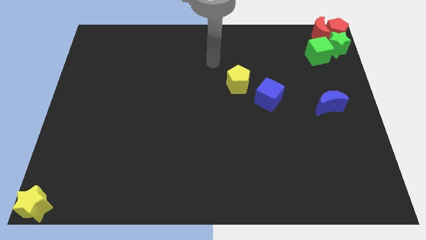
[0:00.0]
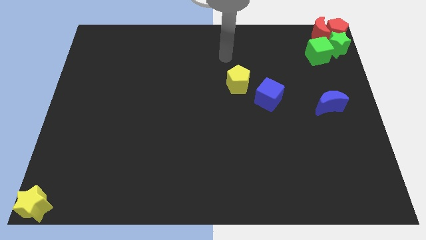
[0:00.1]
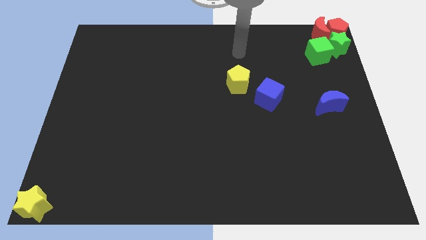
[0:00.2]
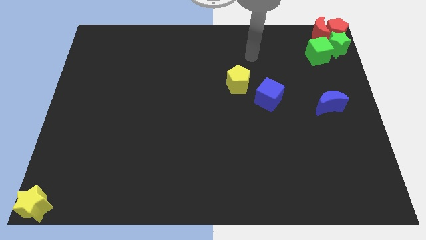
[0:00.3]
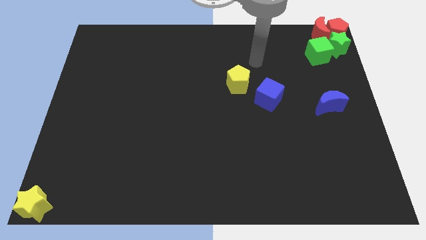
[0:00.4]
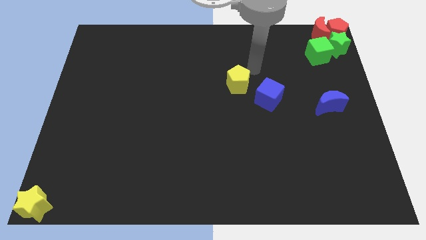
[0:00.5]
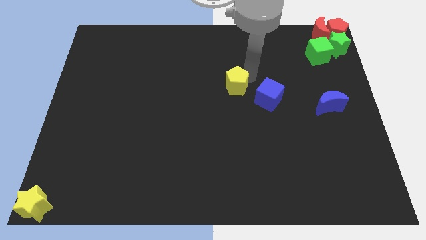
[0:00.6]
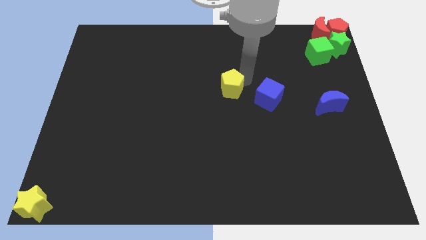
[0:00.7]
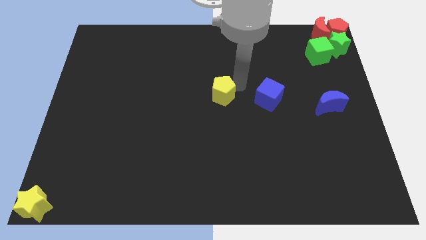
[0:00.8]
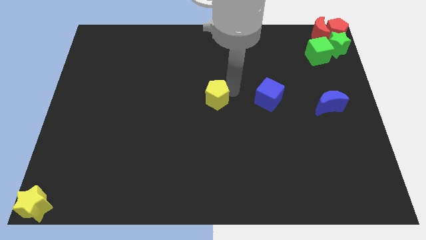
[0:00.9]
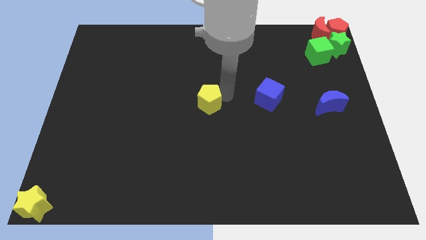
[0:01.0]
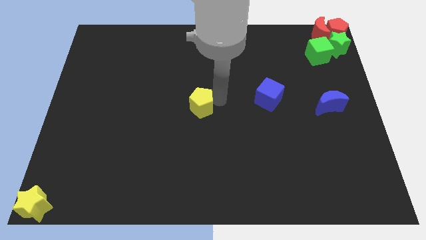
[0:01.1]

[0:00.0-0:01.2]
push the yellow pentagon to the center of the board

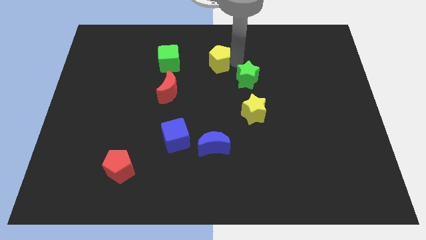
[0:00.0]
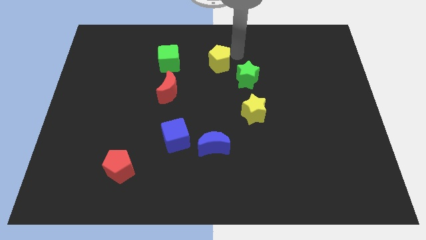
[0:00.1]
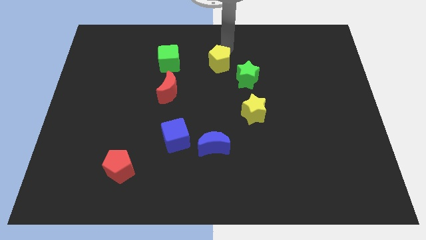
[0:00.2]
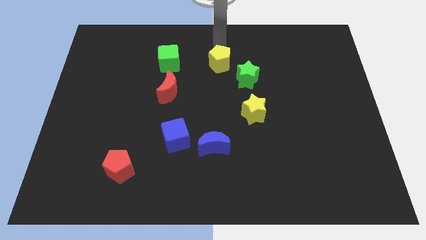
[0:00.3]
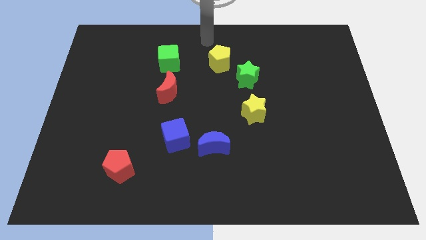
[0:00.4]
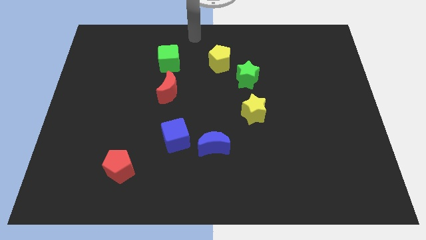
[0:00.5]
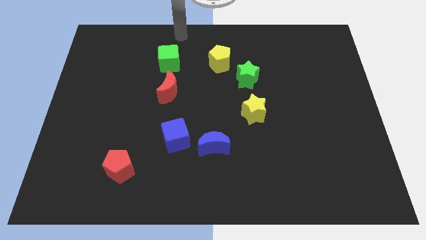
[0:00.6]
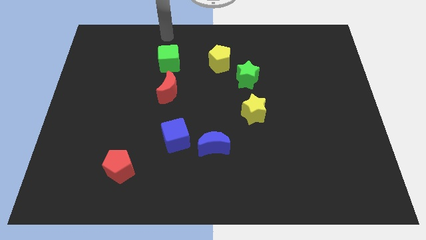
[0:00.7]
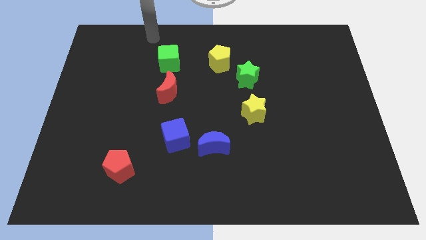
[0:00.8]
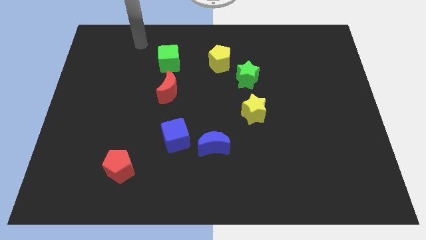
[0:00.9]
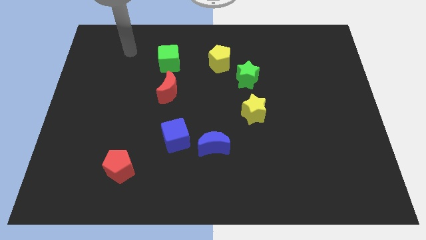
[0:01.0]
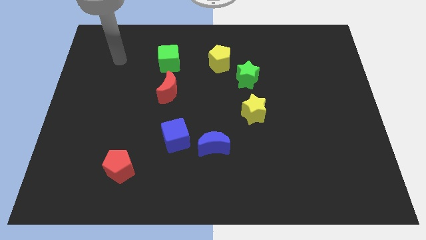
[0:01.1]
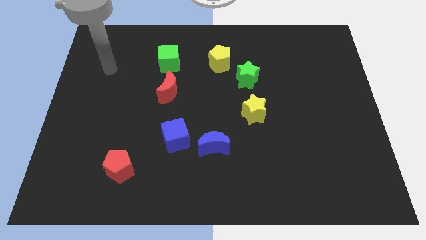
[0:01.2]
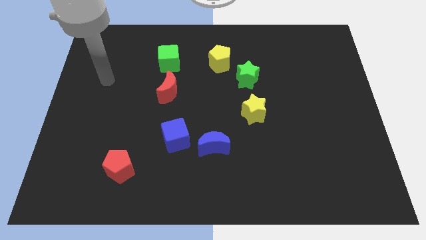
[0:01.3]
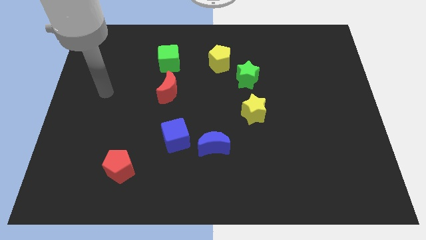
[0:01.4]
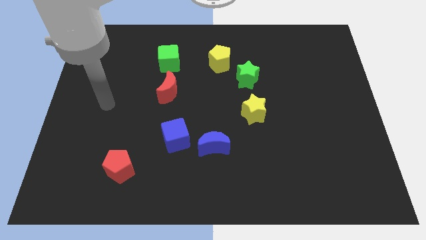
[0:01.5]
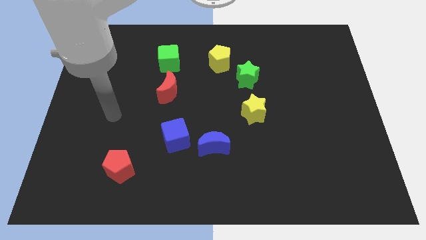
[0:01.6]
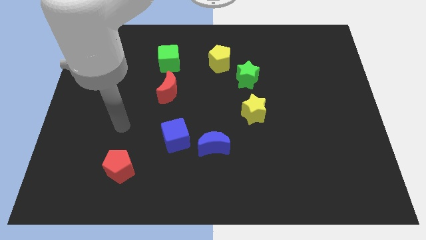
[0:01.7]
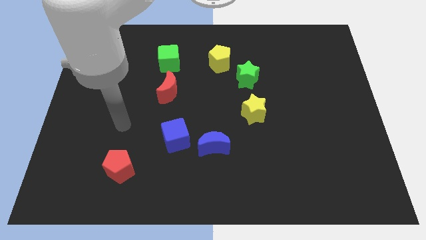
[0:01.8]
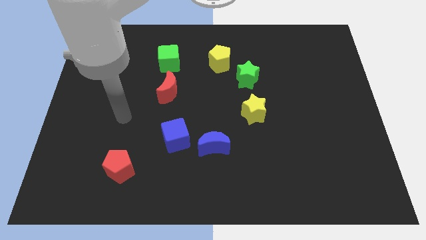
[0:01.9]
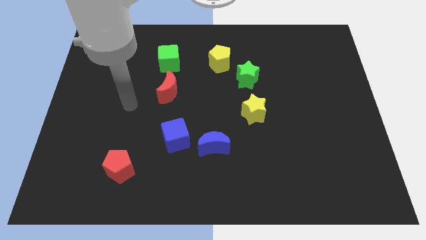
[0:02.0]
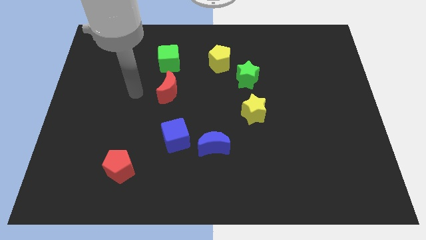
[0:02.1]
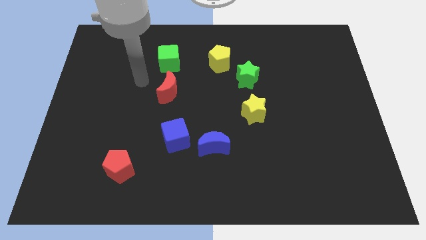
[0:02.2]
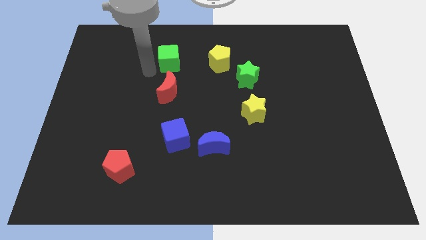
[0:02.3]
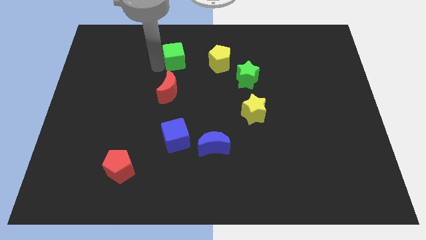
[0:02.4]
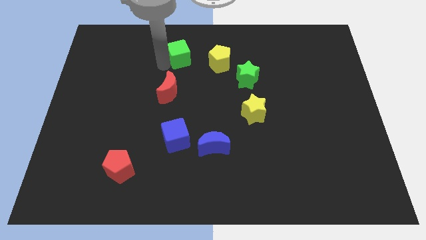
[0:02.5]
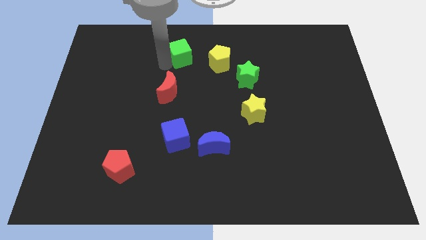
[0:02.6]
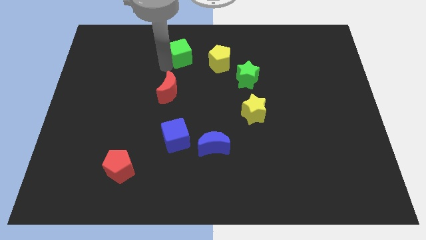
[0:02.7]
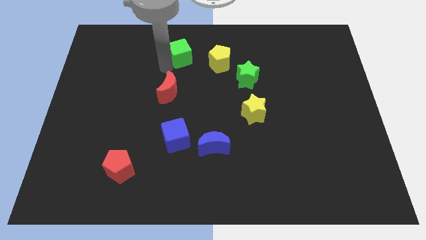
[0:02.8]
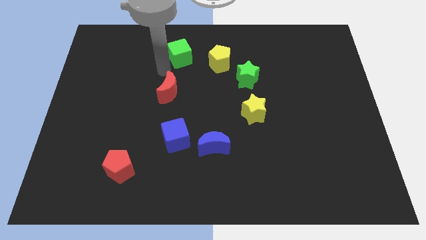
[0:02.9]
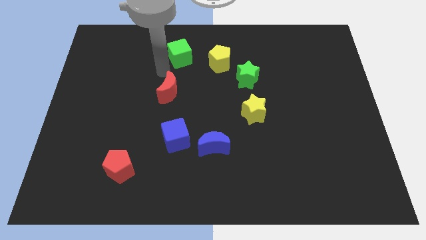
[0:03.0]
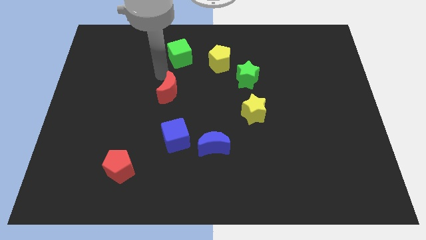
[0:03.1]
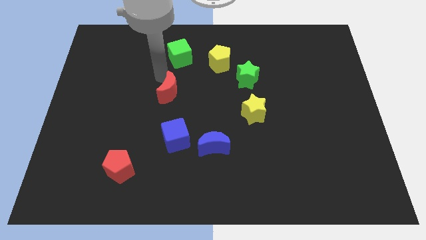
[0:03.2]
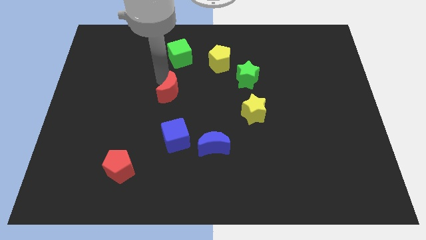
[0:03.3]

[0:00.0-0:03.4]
move the green cube towards the top center of the board slightly

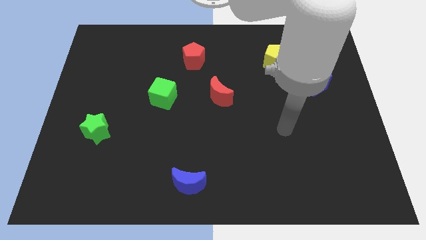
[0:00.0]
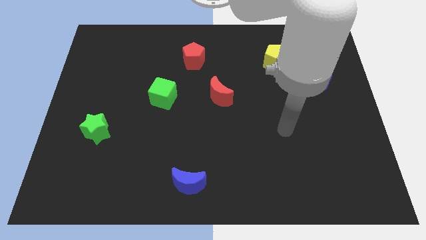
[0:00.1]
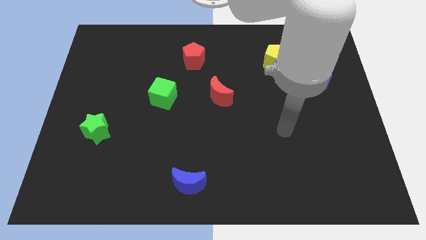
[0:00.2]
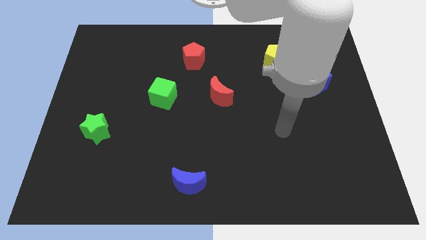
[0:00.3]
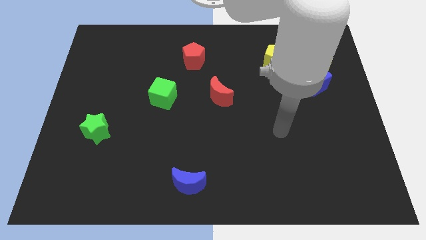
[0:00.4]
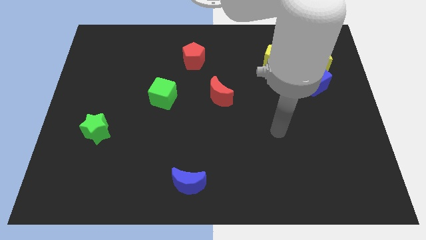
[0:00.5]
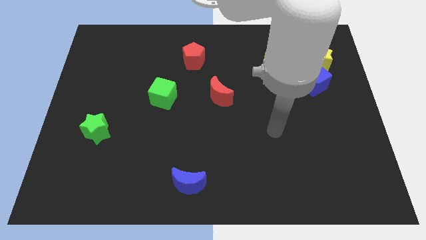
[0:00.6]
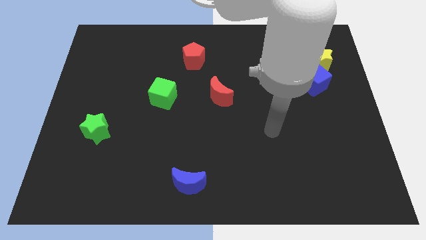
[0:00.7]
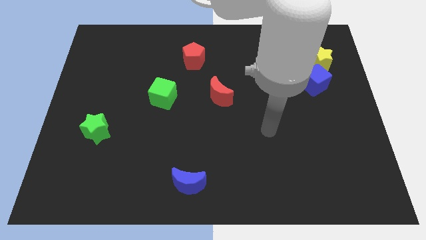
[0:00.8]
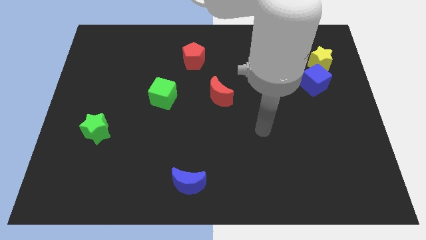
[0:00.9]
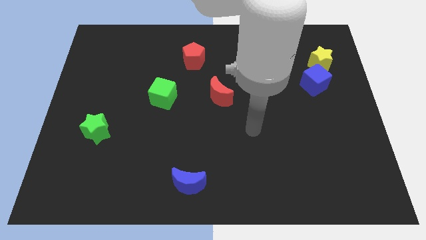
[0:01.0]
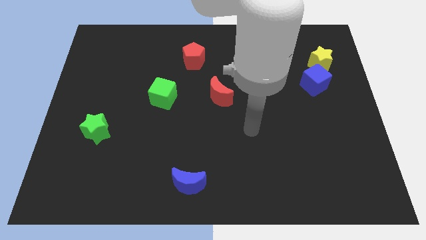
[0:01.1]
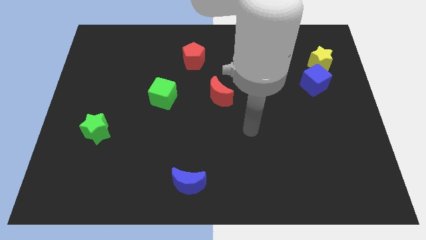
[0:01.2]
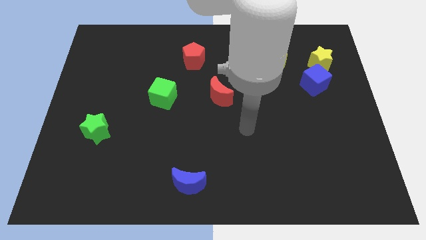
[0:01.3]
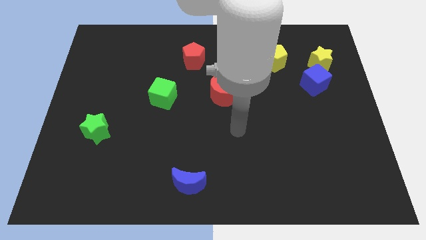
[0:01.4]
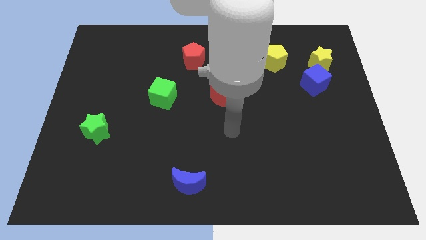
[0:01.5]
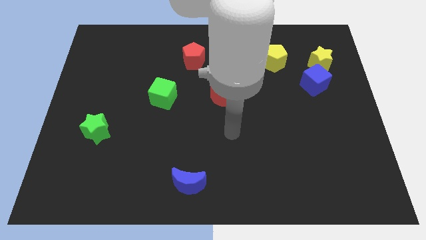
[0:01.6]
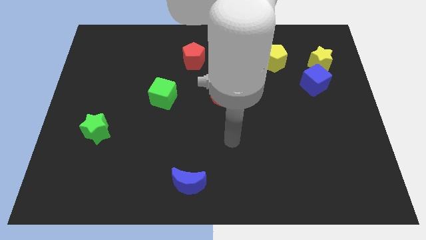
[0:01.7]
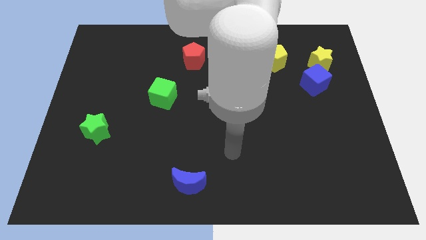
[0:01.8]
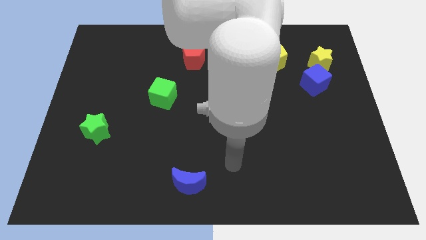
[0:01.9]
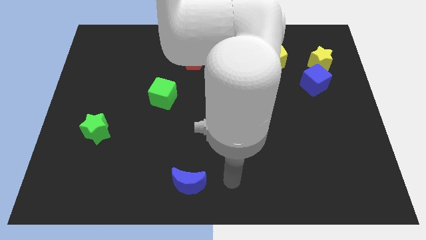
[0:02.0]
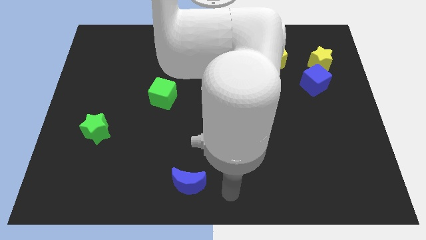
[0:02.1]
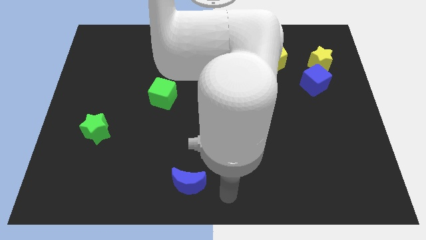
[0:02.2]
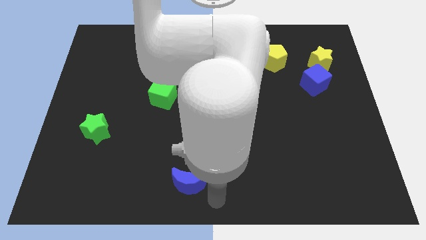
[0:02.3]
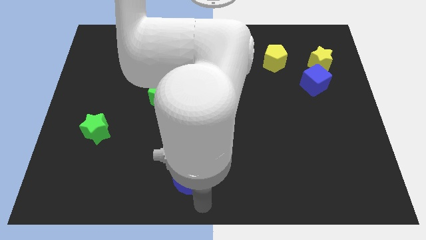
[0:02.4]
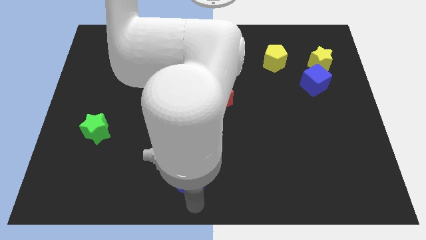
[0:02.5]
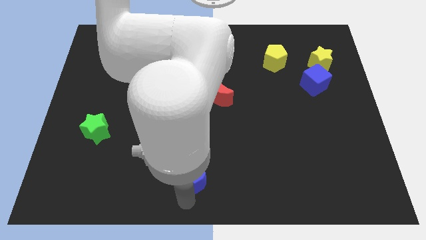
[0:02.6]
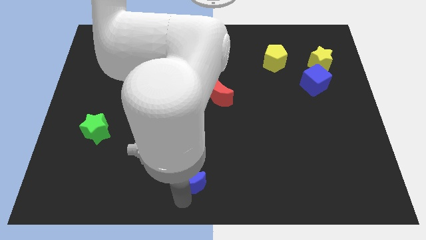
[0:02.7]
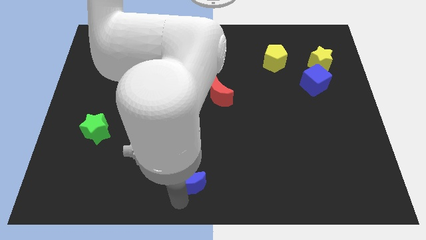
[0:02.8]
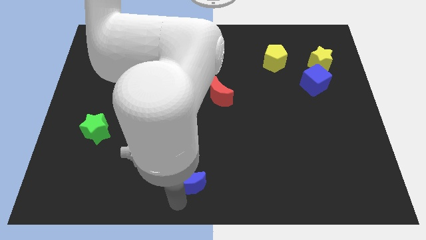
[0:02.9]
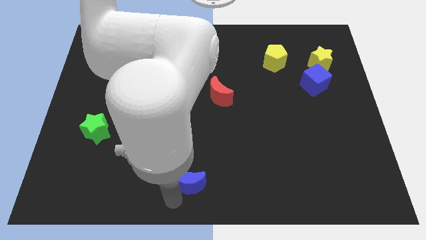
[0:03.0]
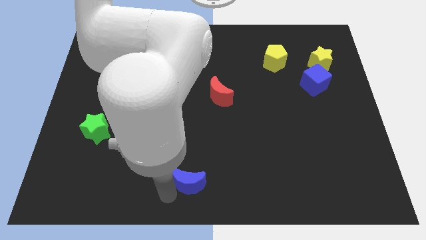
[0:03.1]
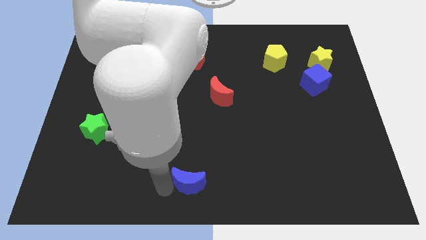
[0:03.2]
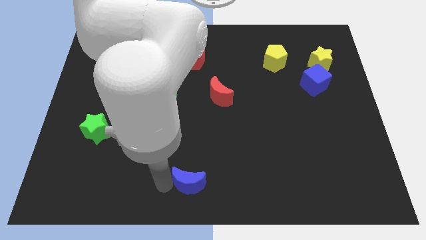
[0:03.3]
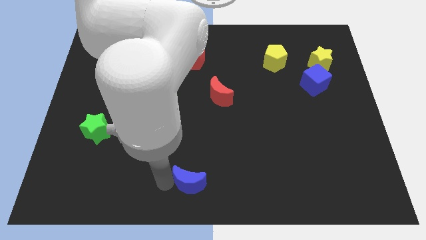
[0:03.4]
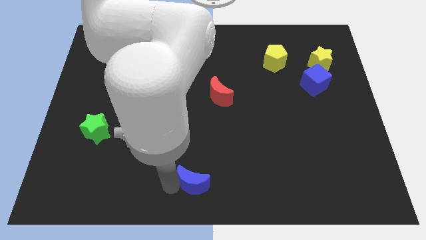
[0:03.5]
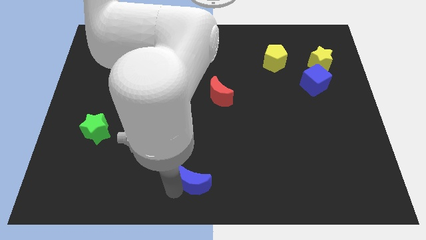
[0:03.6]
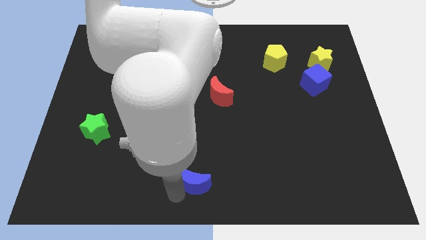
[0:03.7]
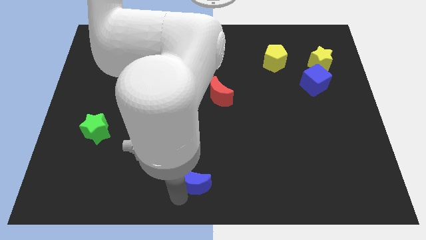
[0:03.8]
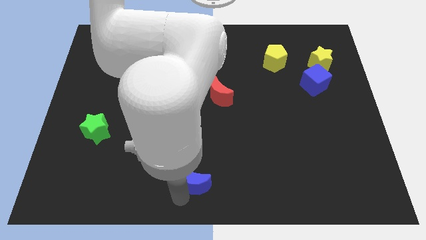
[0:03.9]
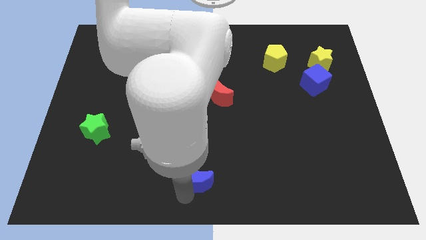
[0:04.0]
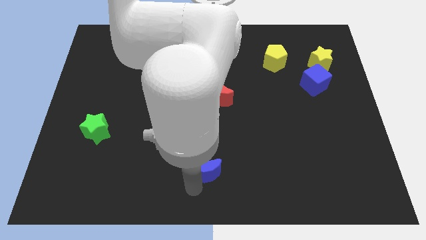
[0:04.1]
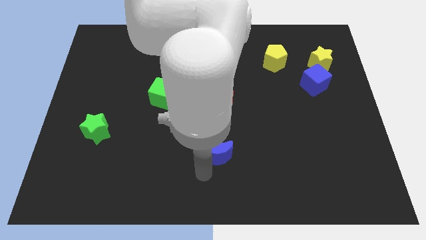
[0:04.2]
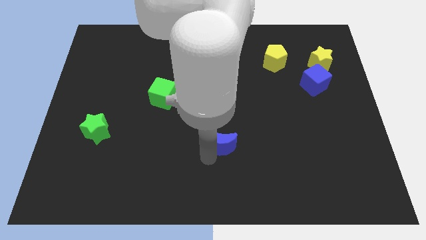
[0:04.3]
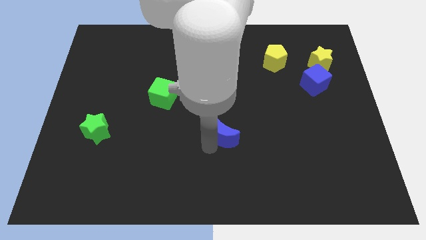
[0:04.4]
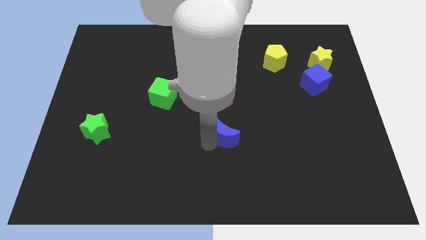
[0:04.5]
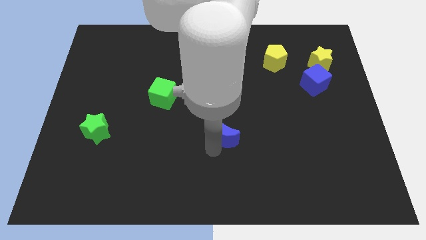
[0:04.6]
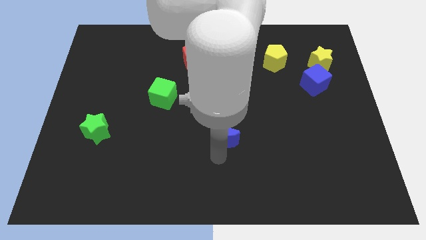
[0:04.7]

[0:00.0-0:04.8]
place the blue moon horizontally to the right side of the green star
